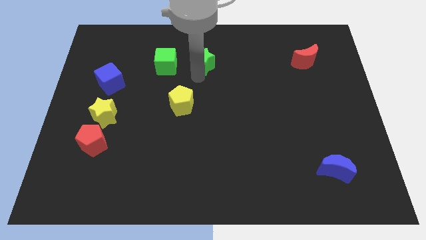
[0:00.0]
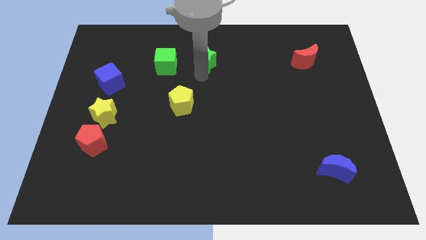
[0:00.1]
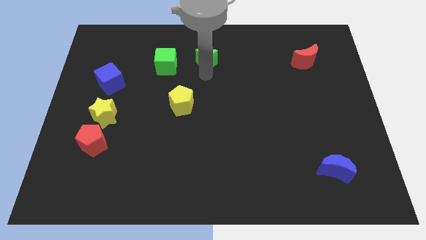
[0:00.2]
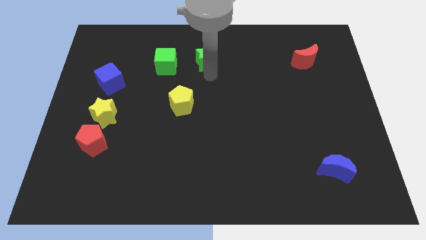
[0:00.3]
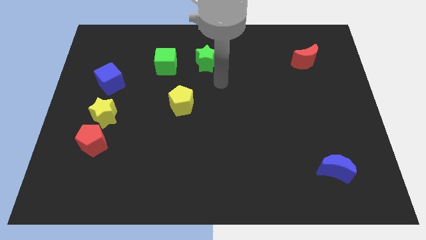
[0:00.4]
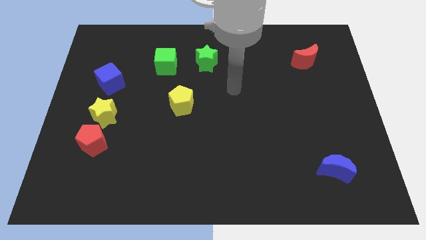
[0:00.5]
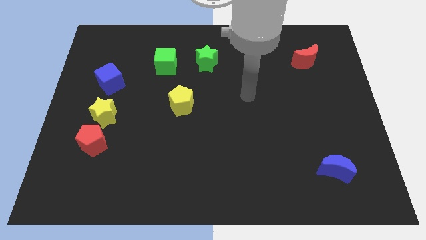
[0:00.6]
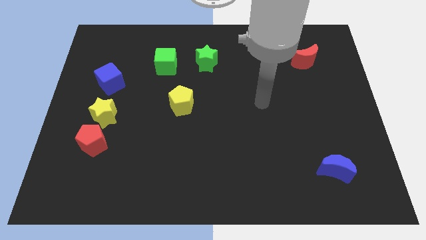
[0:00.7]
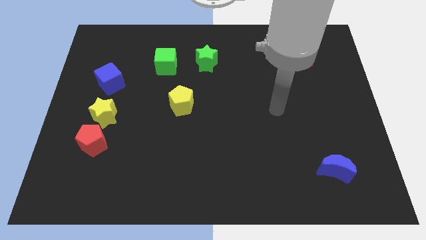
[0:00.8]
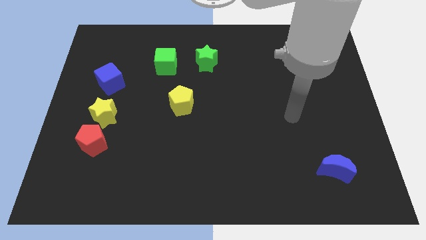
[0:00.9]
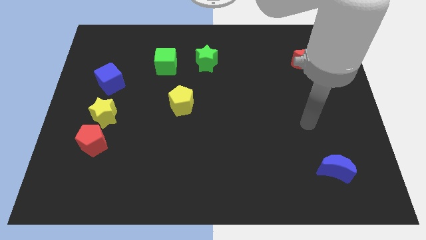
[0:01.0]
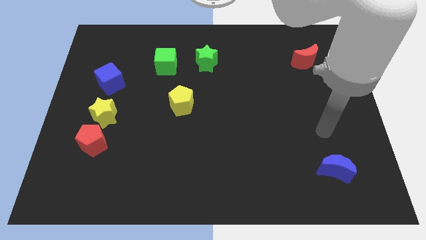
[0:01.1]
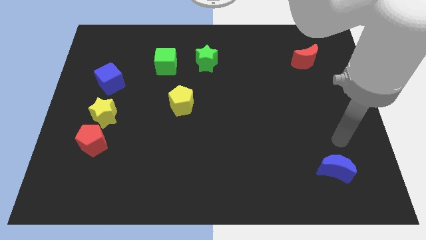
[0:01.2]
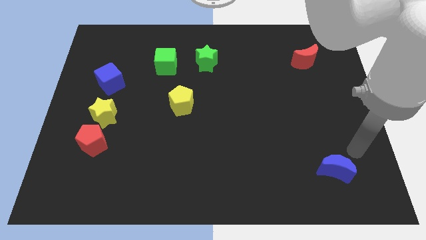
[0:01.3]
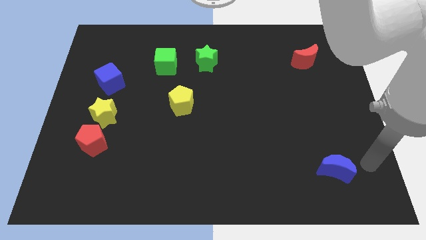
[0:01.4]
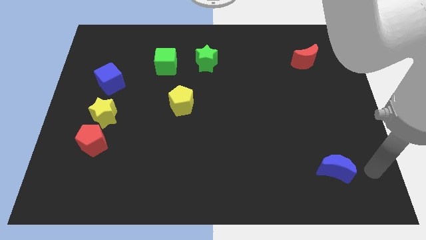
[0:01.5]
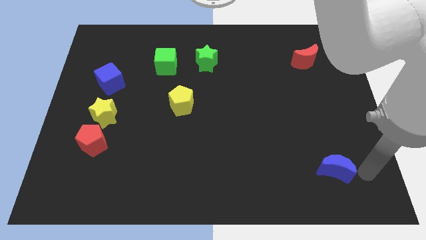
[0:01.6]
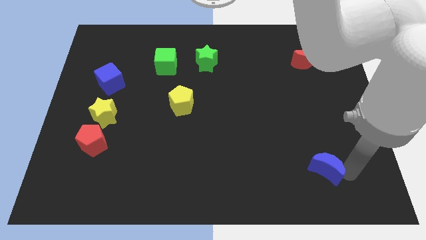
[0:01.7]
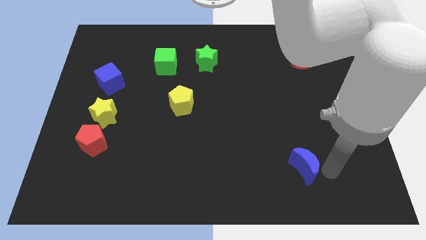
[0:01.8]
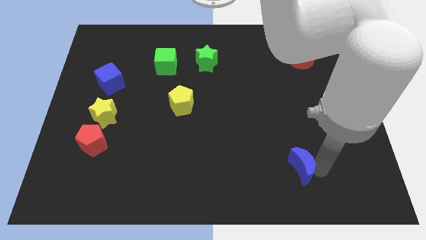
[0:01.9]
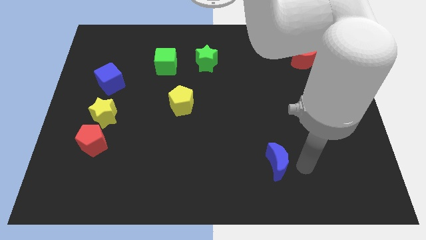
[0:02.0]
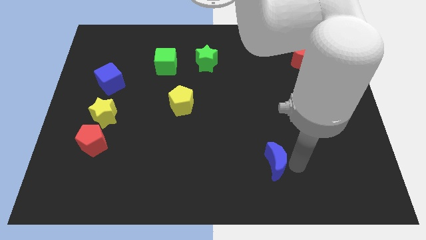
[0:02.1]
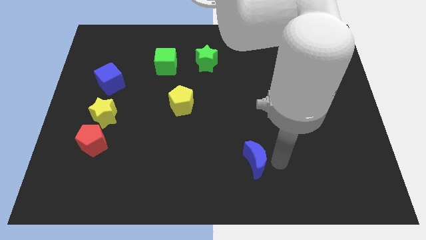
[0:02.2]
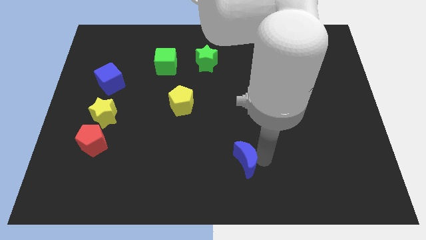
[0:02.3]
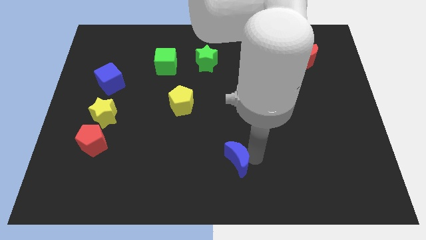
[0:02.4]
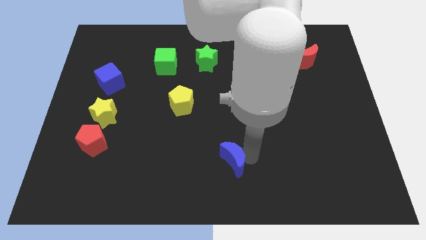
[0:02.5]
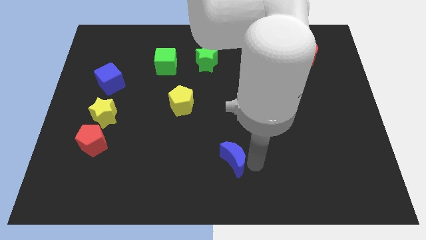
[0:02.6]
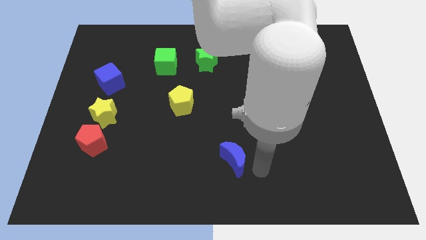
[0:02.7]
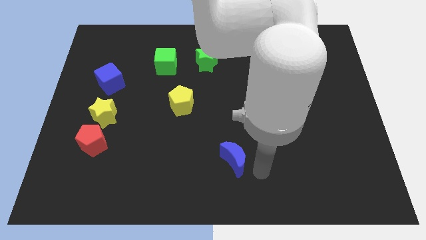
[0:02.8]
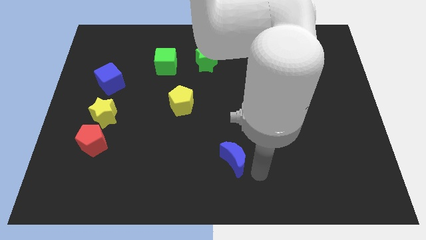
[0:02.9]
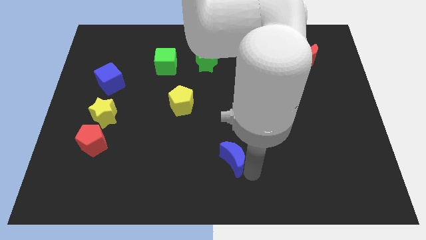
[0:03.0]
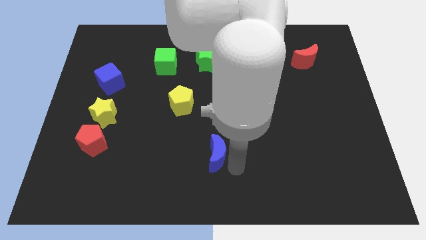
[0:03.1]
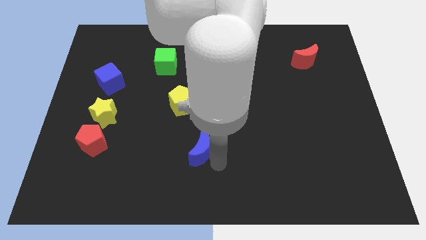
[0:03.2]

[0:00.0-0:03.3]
move the blue crescent bottom right diagonally to the yellow pentagon

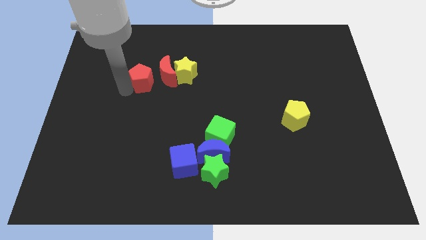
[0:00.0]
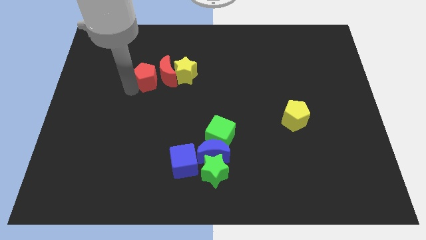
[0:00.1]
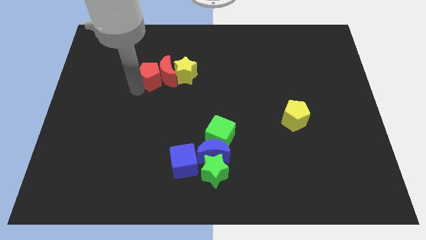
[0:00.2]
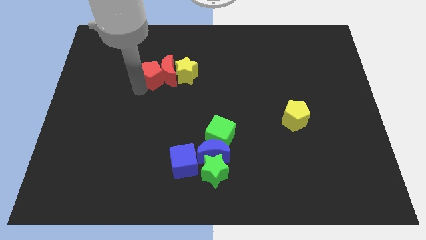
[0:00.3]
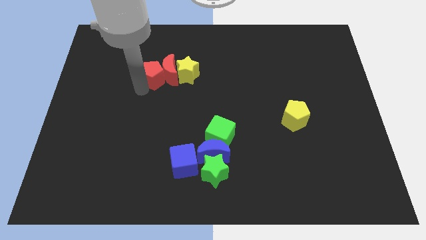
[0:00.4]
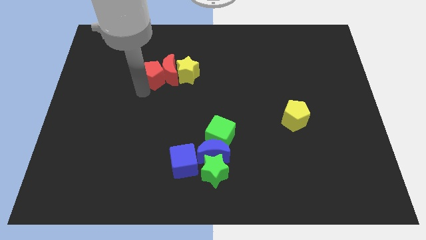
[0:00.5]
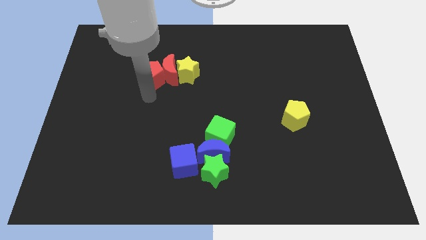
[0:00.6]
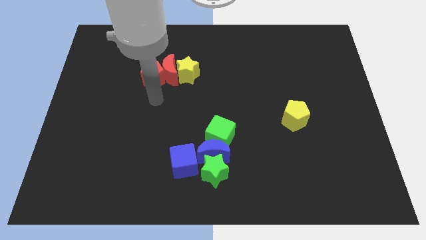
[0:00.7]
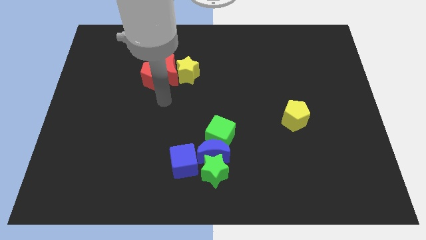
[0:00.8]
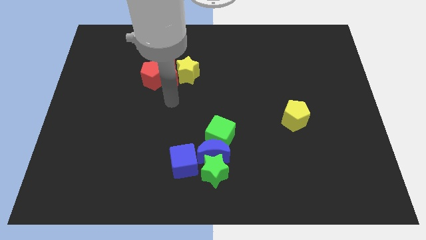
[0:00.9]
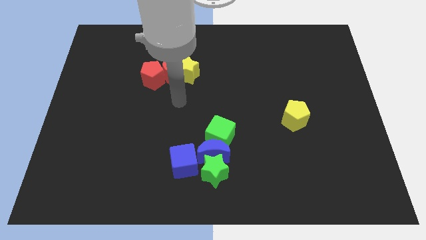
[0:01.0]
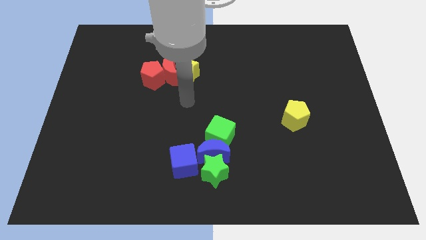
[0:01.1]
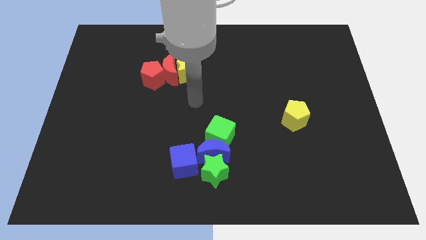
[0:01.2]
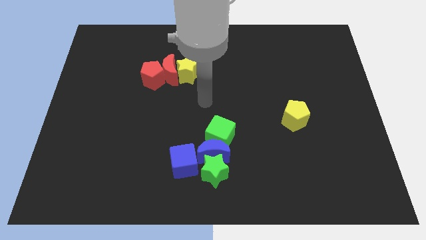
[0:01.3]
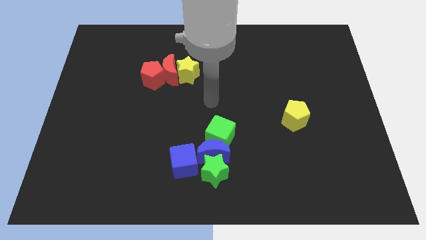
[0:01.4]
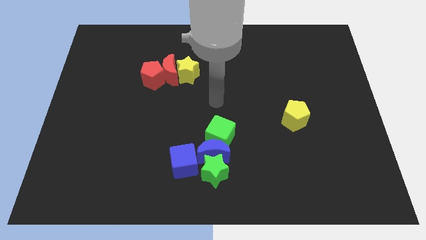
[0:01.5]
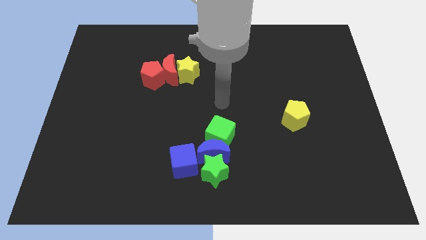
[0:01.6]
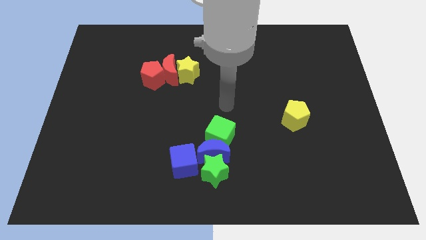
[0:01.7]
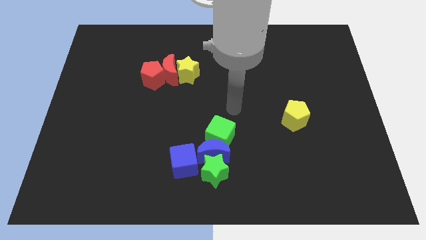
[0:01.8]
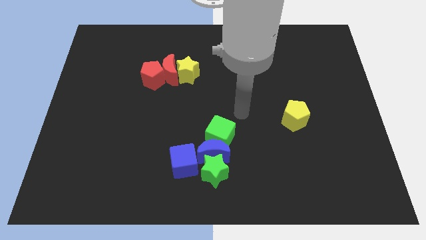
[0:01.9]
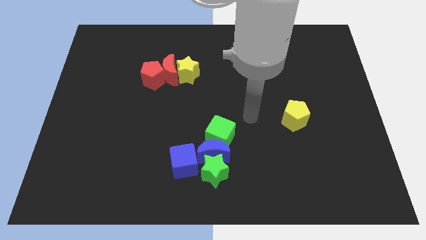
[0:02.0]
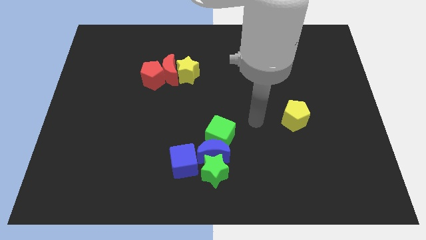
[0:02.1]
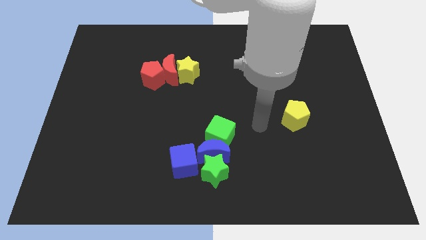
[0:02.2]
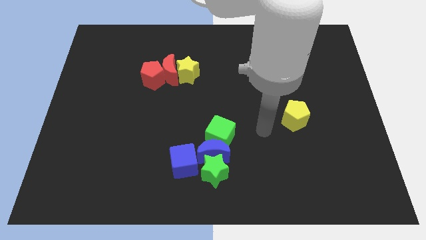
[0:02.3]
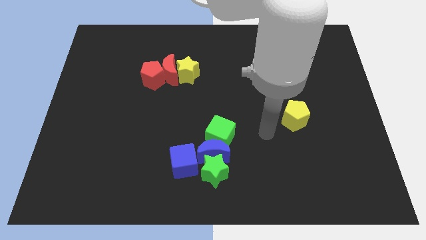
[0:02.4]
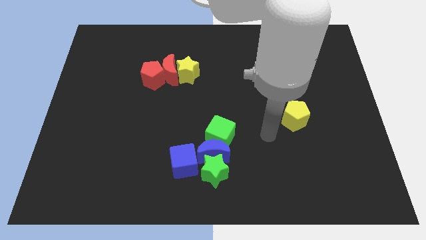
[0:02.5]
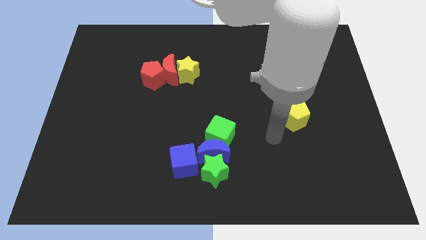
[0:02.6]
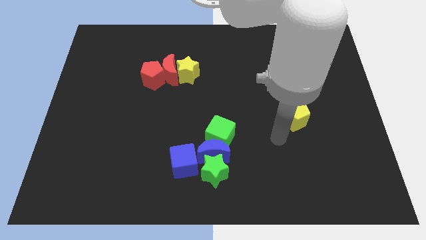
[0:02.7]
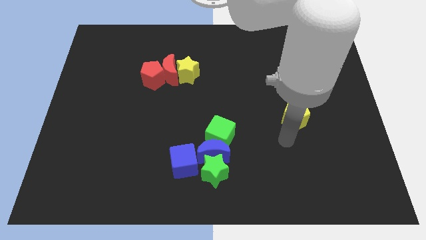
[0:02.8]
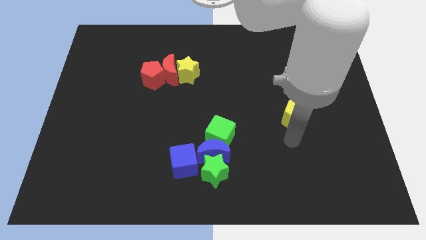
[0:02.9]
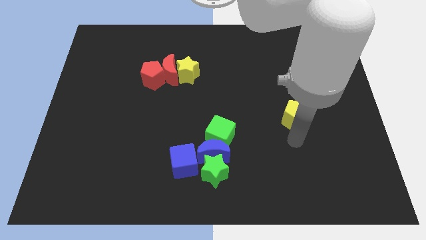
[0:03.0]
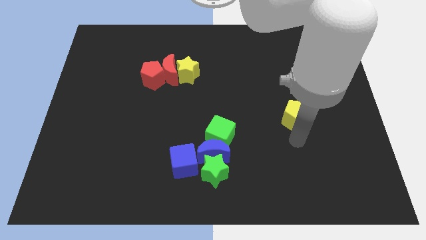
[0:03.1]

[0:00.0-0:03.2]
place the arm below the yellow pentagon

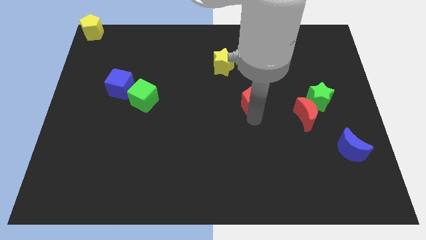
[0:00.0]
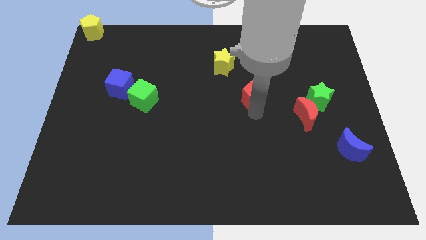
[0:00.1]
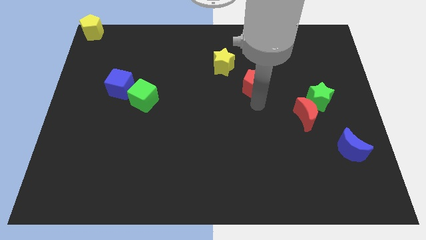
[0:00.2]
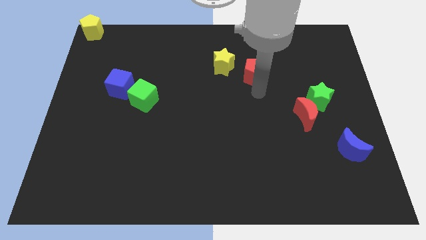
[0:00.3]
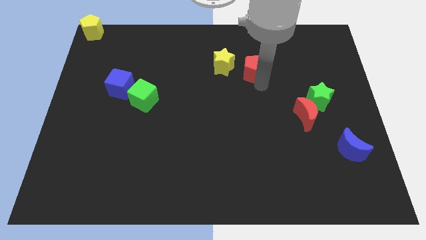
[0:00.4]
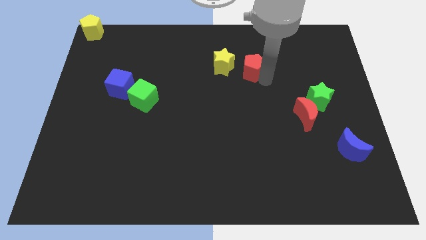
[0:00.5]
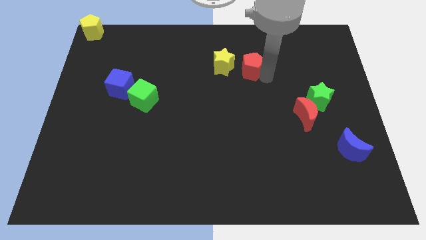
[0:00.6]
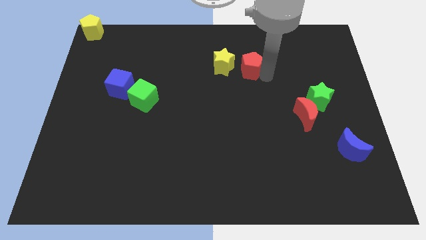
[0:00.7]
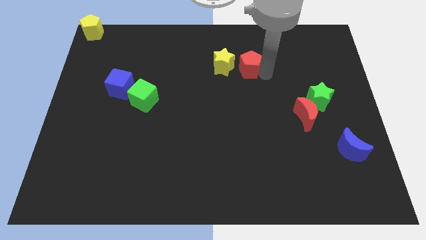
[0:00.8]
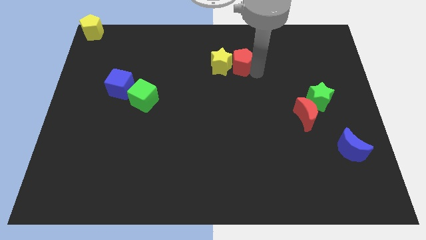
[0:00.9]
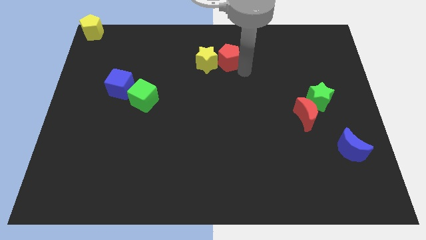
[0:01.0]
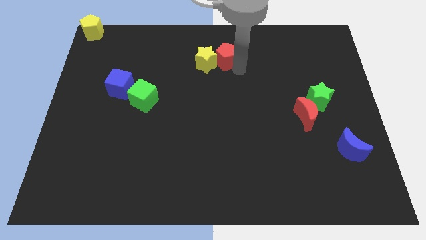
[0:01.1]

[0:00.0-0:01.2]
move the red pentagon into the right side of the yellow star

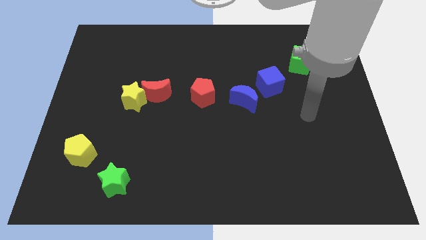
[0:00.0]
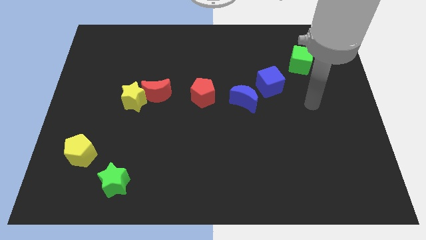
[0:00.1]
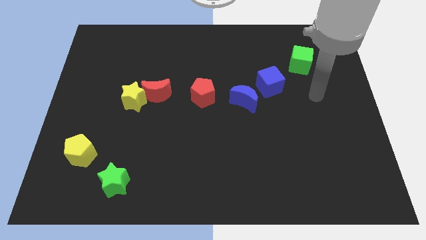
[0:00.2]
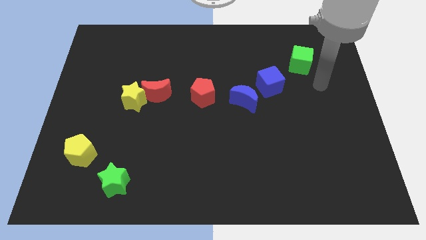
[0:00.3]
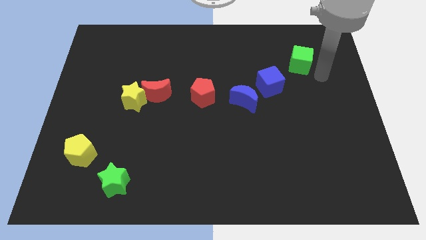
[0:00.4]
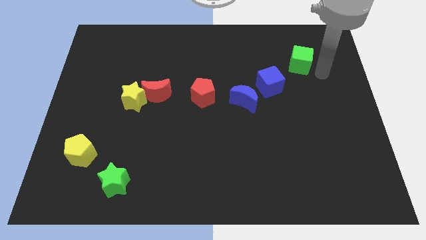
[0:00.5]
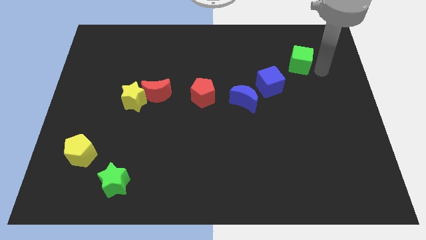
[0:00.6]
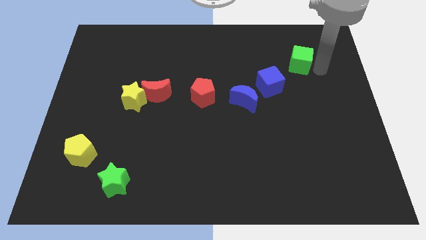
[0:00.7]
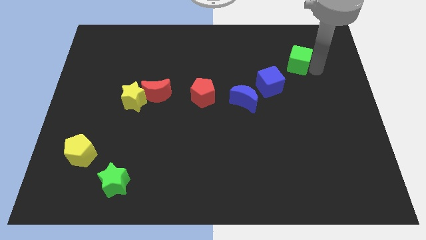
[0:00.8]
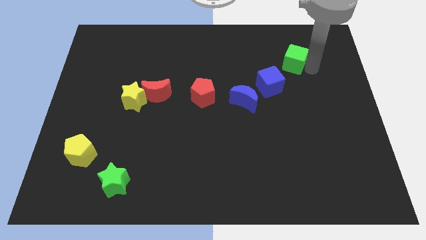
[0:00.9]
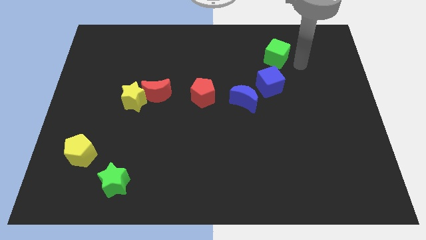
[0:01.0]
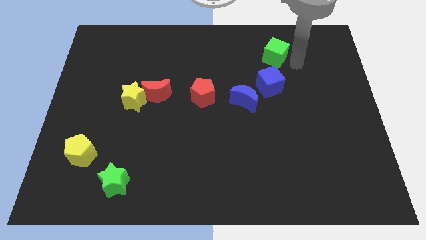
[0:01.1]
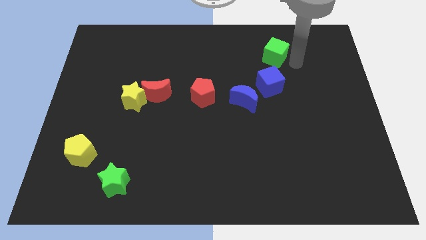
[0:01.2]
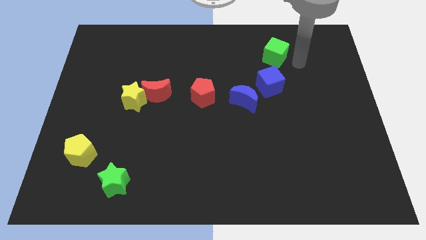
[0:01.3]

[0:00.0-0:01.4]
move the green cube slightly left
